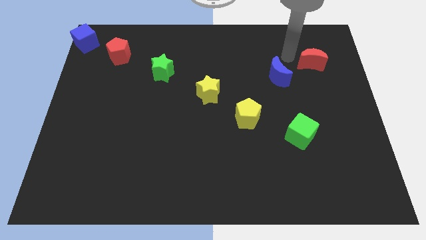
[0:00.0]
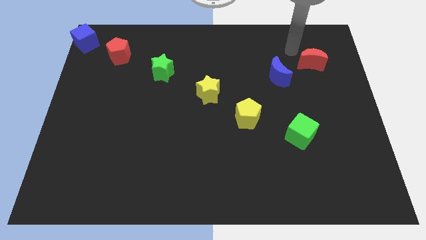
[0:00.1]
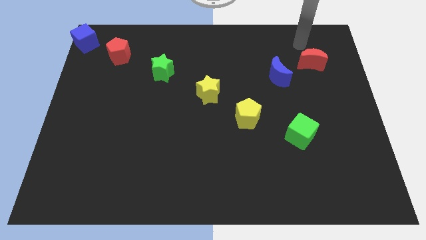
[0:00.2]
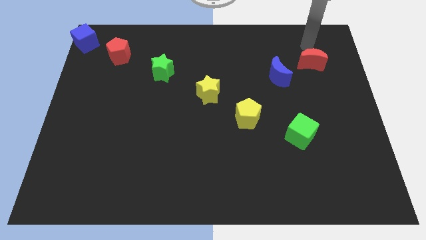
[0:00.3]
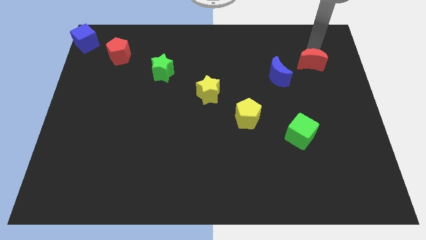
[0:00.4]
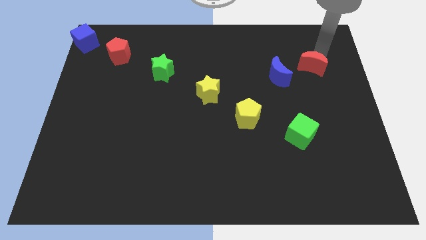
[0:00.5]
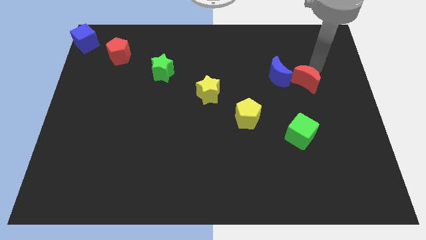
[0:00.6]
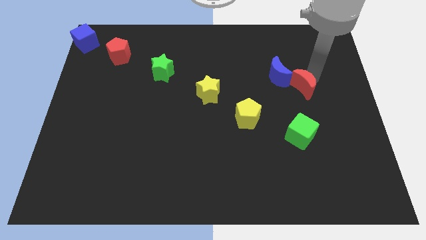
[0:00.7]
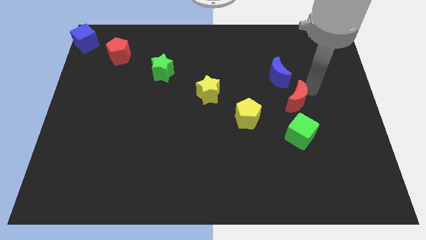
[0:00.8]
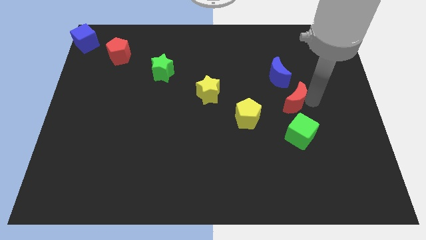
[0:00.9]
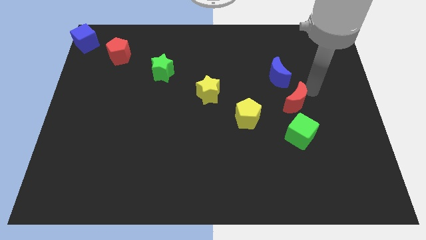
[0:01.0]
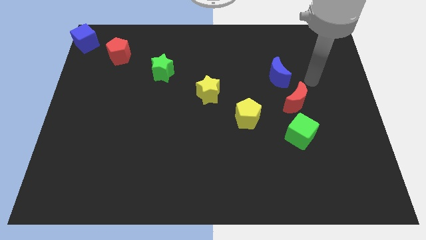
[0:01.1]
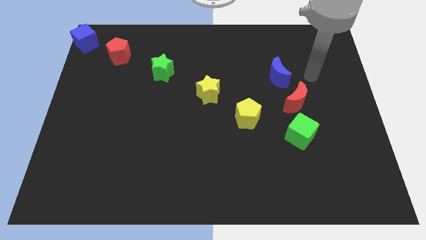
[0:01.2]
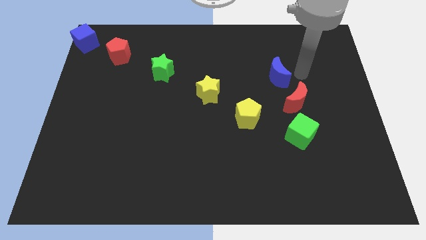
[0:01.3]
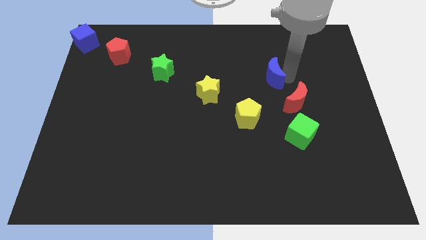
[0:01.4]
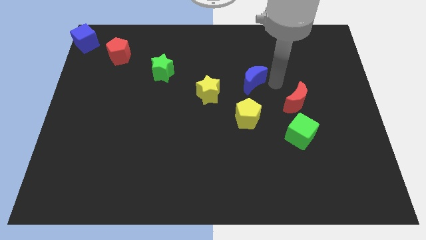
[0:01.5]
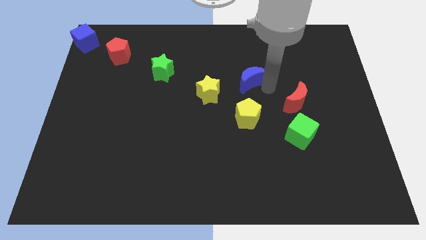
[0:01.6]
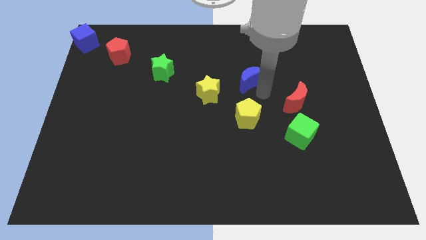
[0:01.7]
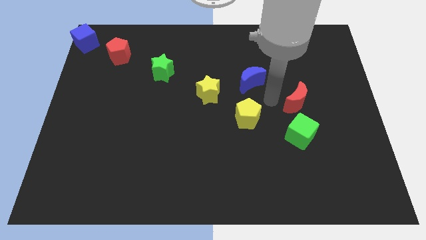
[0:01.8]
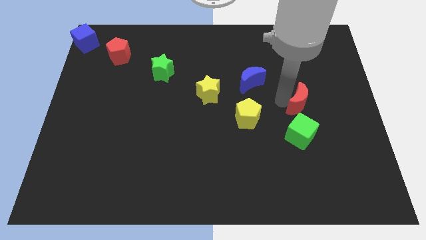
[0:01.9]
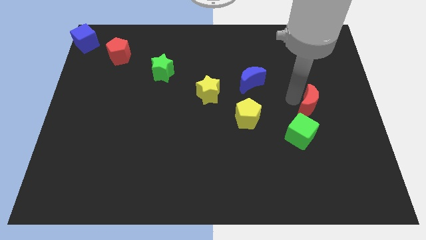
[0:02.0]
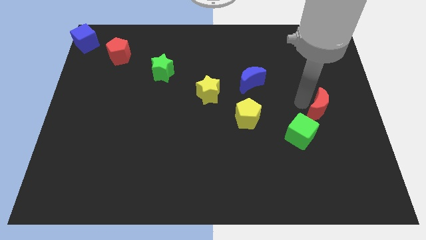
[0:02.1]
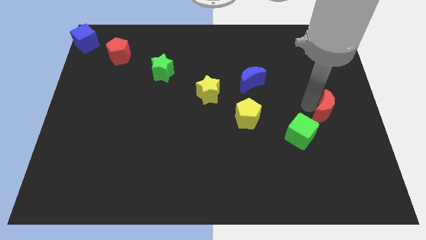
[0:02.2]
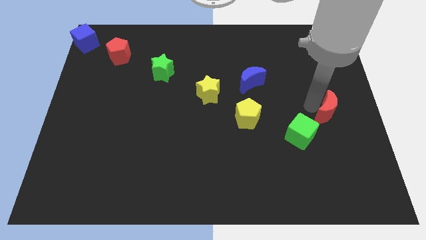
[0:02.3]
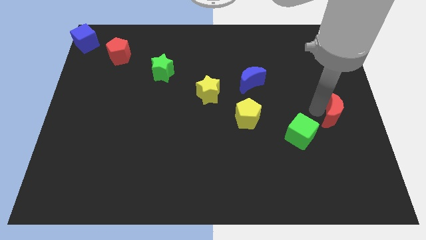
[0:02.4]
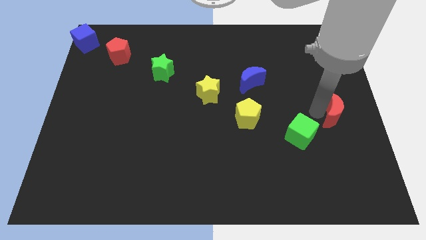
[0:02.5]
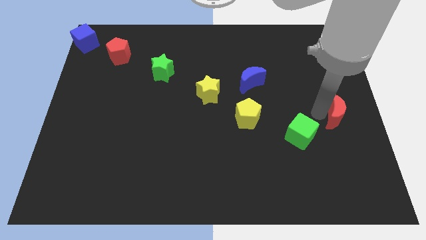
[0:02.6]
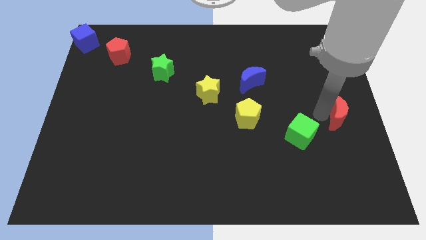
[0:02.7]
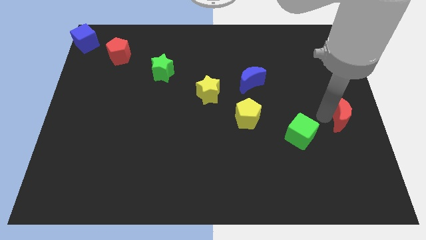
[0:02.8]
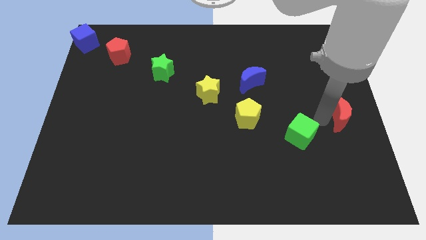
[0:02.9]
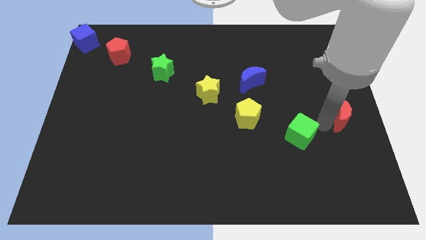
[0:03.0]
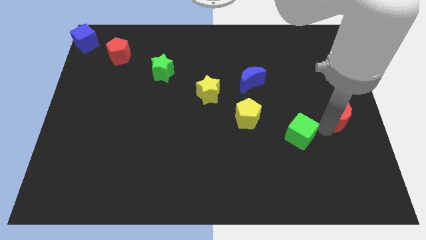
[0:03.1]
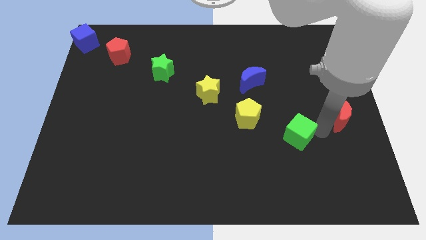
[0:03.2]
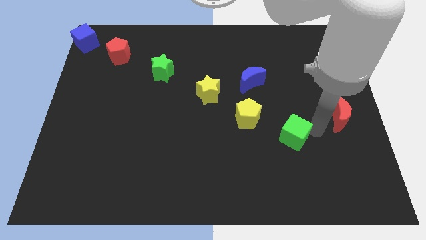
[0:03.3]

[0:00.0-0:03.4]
move the red crescent to the right of the green cube

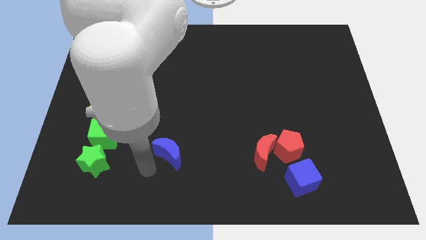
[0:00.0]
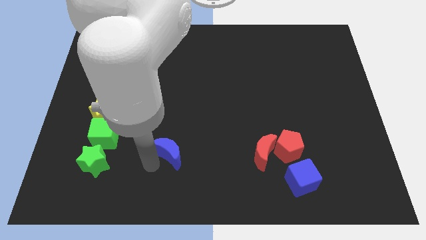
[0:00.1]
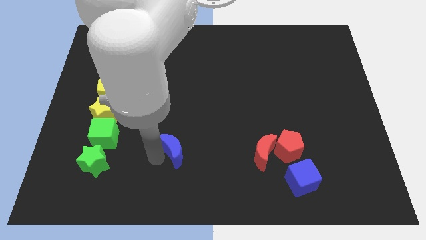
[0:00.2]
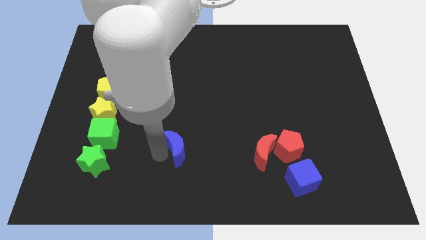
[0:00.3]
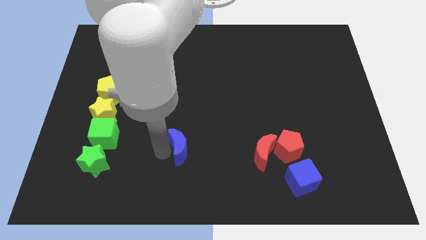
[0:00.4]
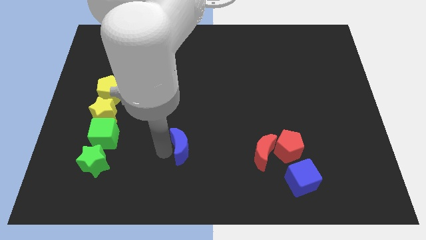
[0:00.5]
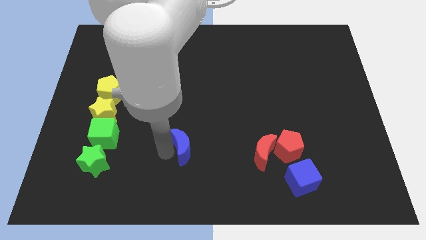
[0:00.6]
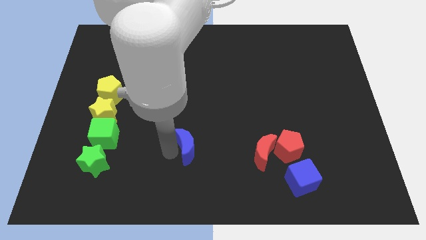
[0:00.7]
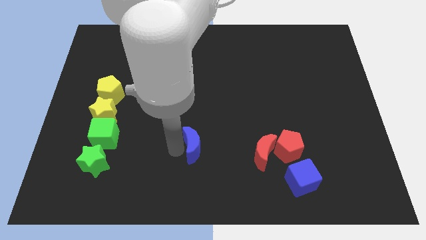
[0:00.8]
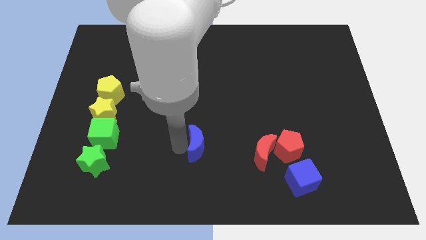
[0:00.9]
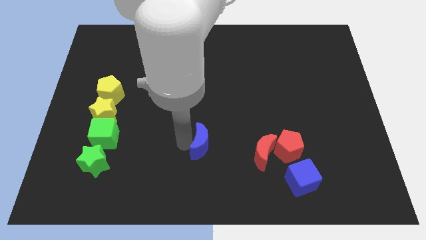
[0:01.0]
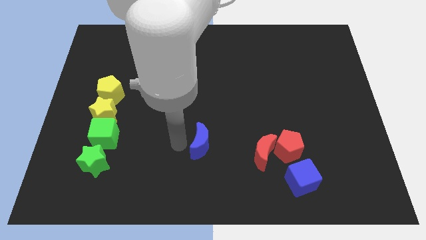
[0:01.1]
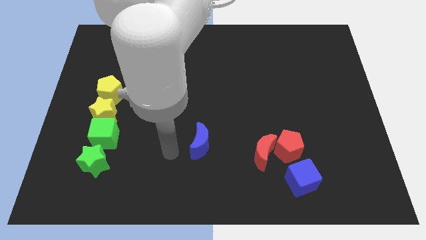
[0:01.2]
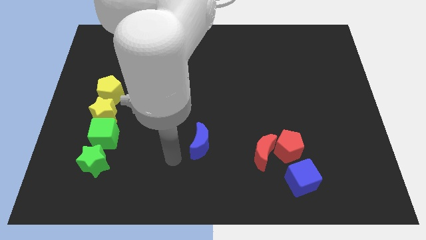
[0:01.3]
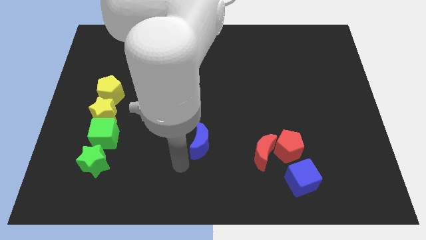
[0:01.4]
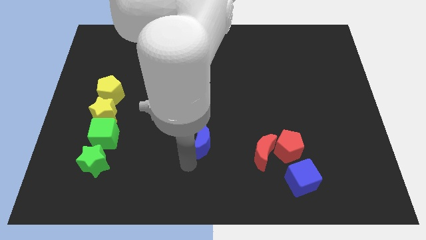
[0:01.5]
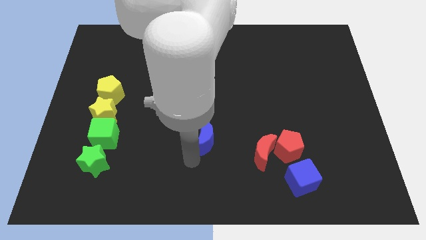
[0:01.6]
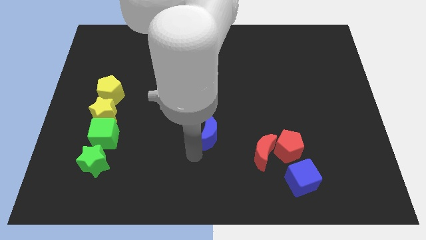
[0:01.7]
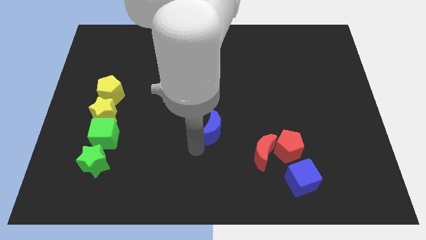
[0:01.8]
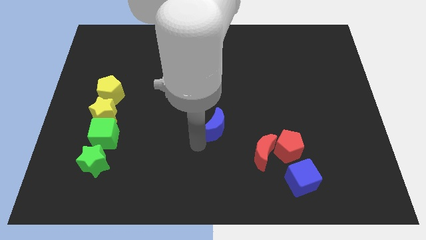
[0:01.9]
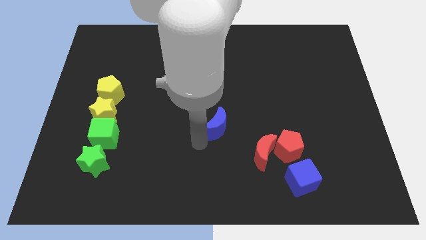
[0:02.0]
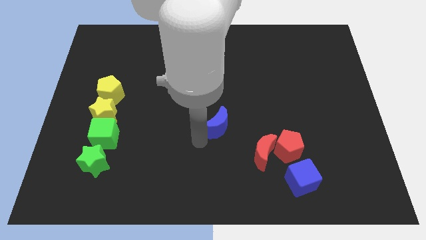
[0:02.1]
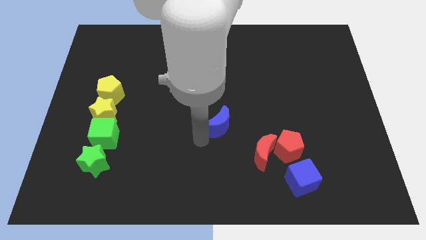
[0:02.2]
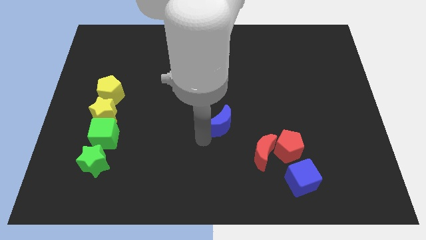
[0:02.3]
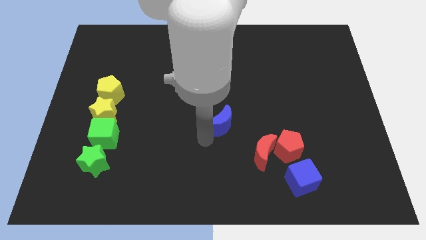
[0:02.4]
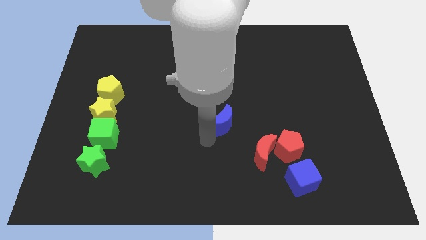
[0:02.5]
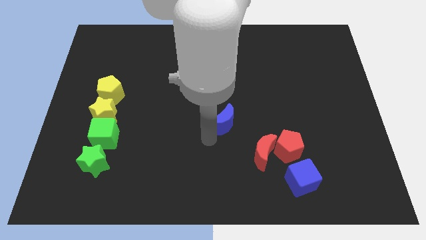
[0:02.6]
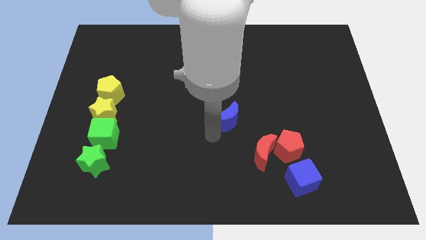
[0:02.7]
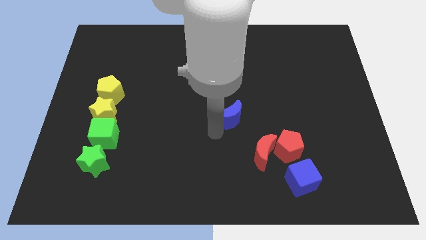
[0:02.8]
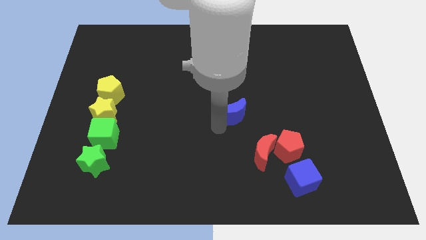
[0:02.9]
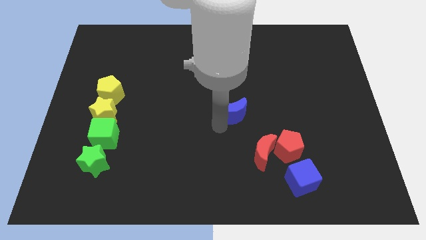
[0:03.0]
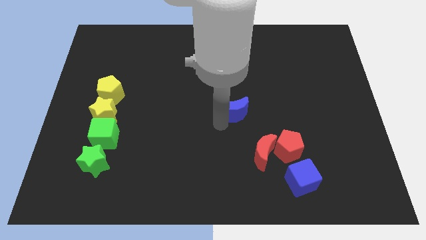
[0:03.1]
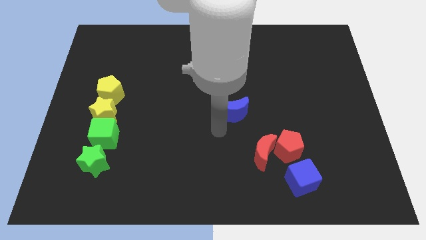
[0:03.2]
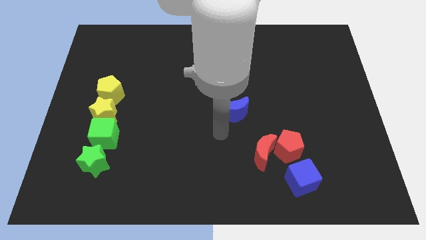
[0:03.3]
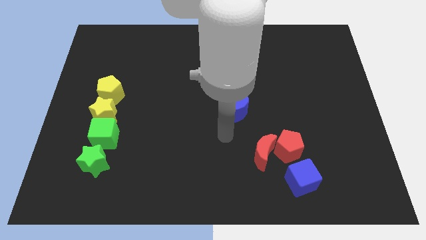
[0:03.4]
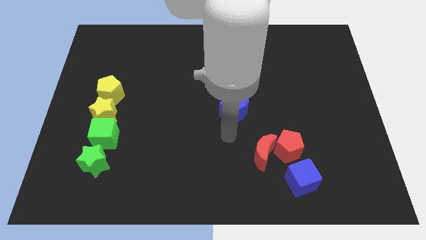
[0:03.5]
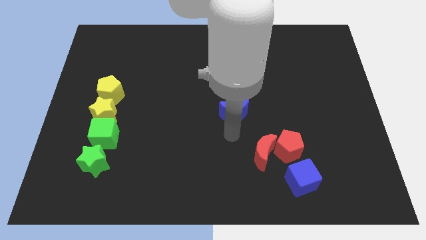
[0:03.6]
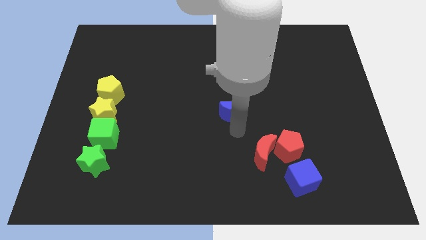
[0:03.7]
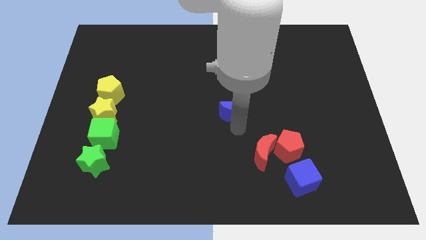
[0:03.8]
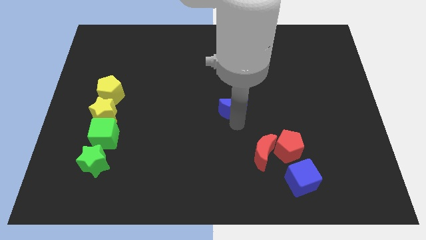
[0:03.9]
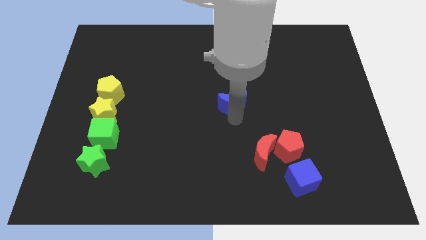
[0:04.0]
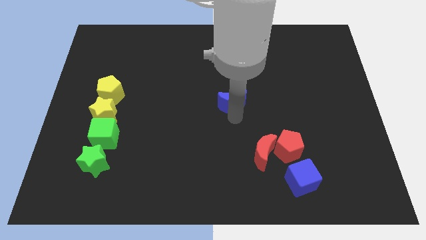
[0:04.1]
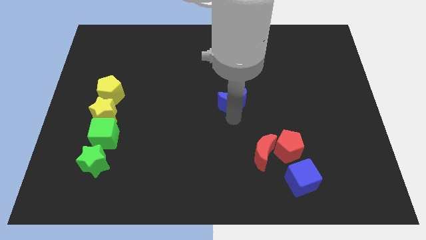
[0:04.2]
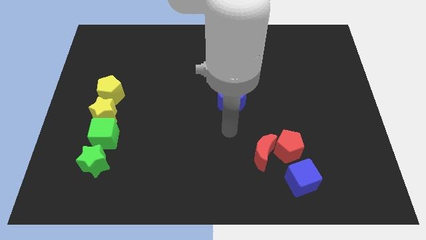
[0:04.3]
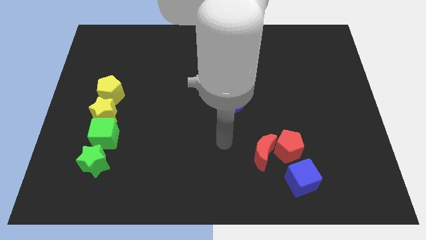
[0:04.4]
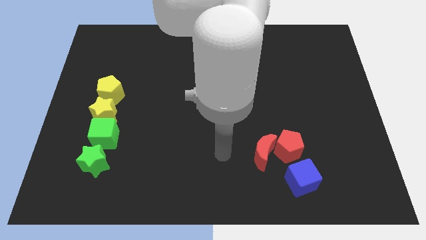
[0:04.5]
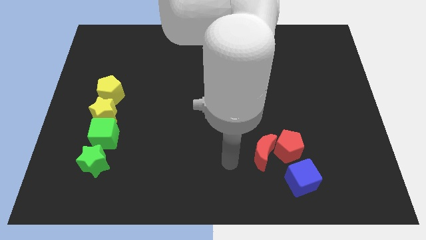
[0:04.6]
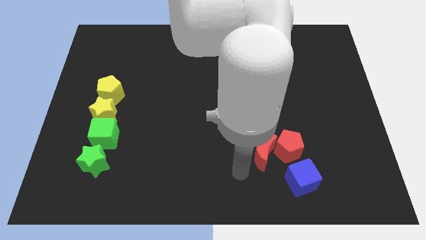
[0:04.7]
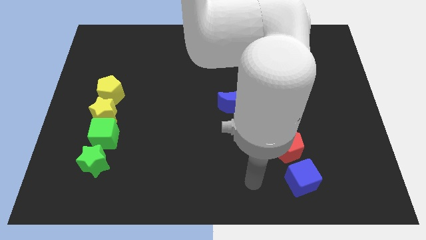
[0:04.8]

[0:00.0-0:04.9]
place the blue moon at the center of the board

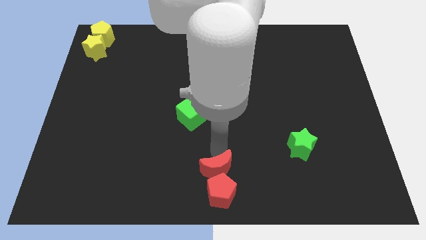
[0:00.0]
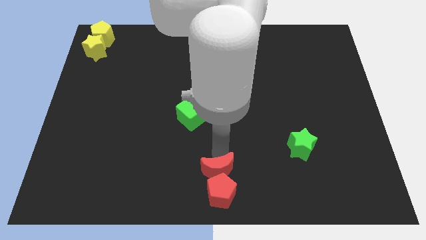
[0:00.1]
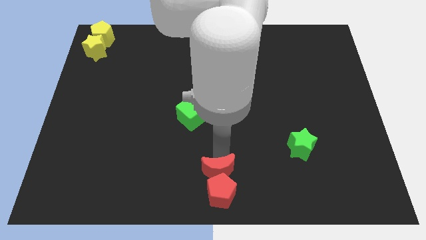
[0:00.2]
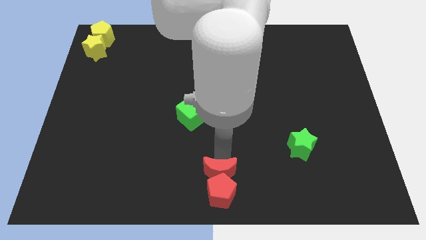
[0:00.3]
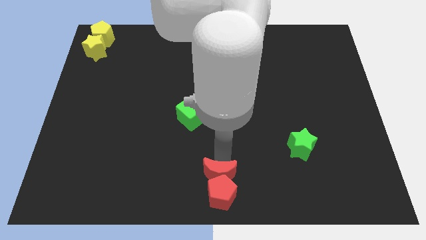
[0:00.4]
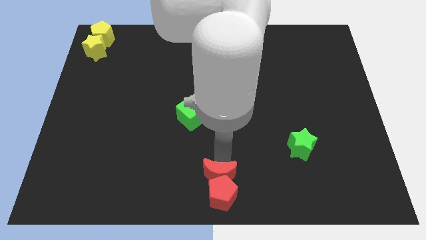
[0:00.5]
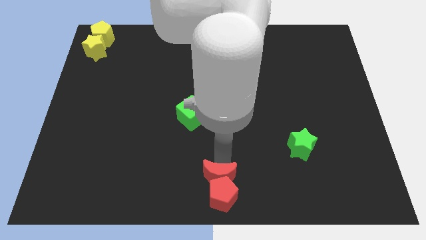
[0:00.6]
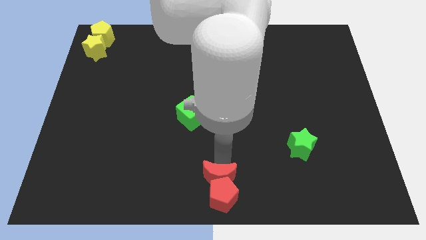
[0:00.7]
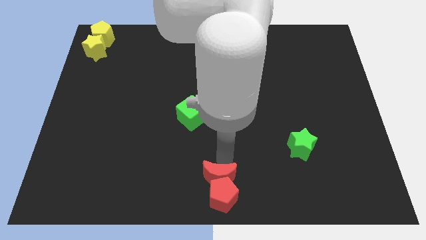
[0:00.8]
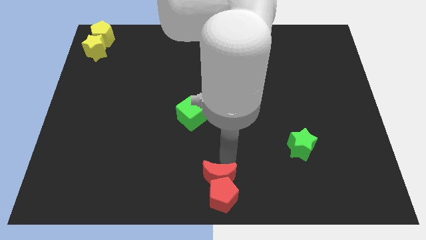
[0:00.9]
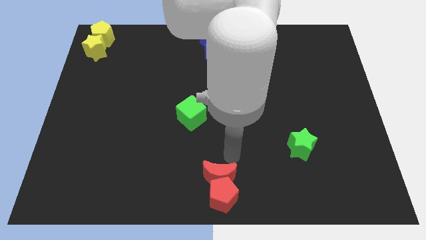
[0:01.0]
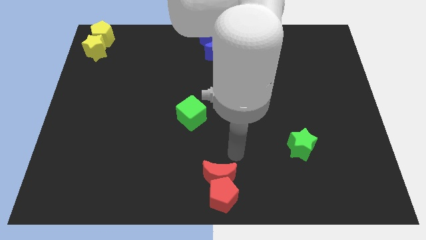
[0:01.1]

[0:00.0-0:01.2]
push the red crescent into the red pentagon
